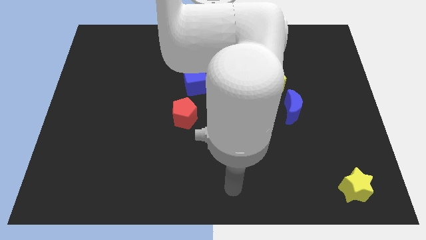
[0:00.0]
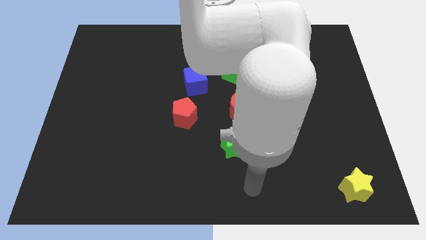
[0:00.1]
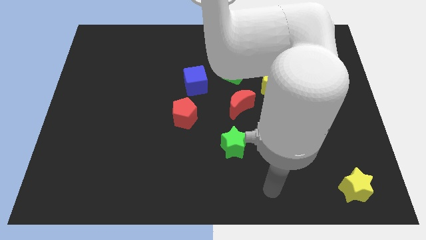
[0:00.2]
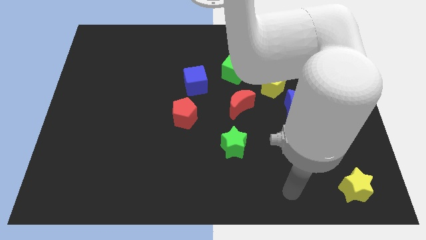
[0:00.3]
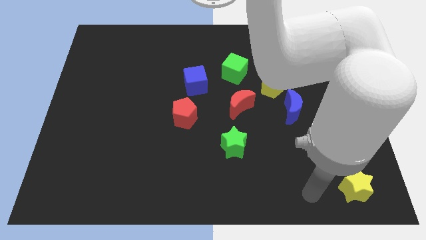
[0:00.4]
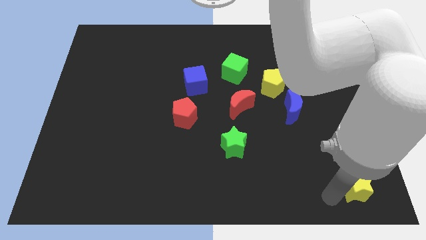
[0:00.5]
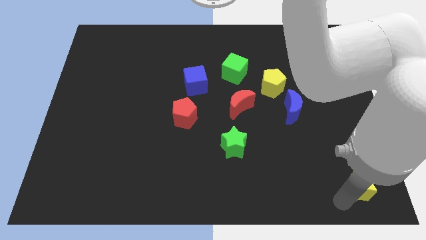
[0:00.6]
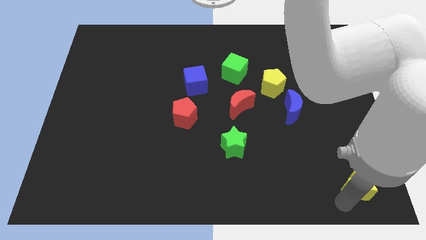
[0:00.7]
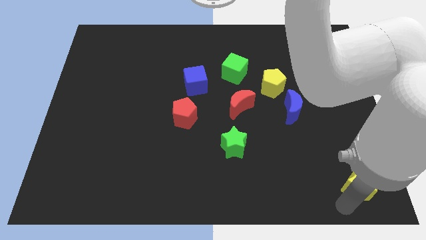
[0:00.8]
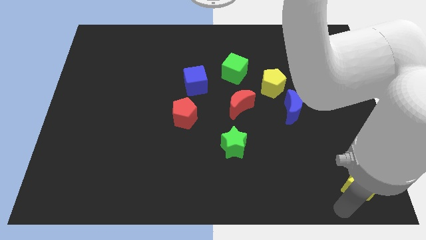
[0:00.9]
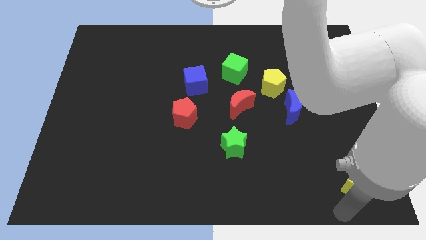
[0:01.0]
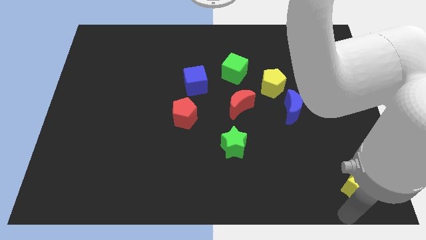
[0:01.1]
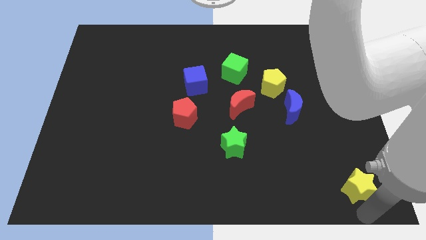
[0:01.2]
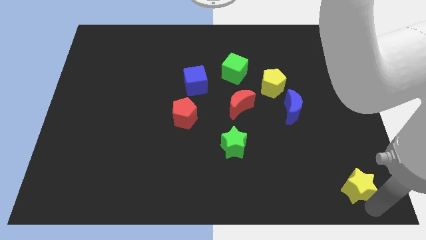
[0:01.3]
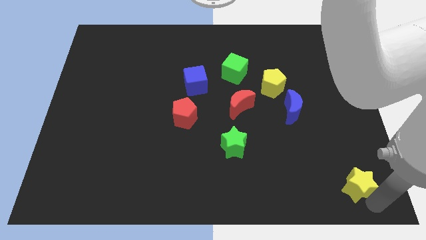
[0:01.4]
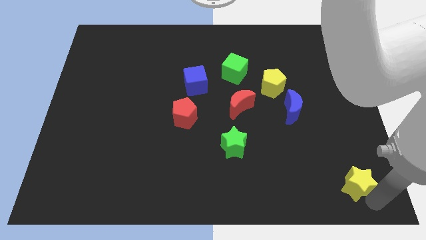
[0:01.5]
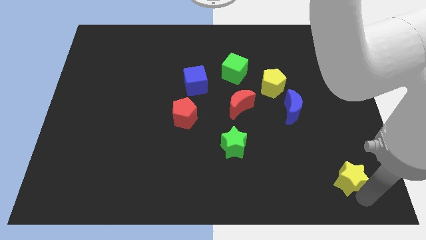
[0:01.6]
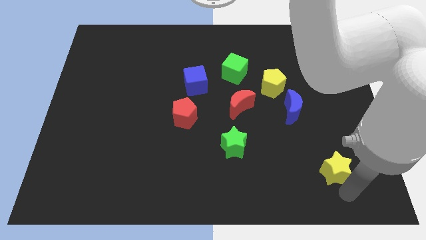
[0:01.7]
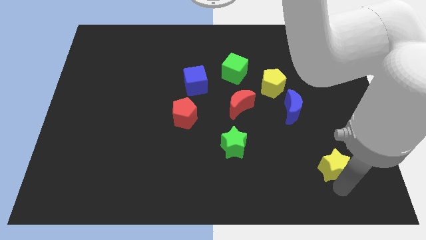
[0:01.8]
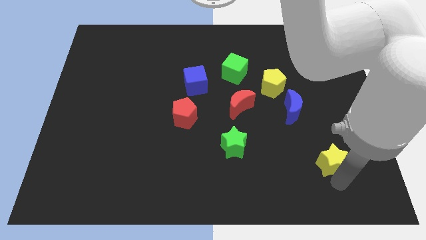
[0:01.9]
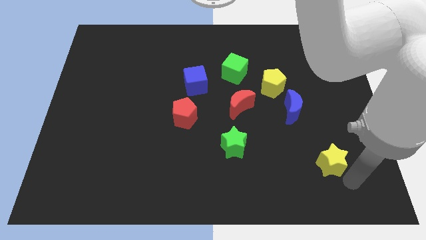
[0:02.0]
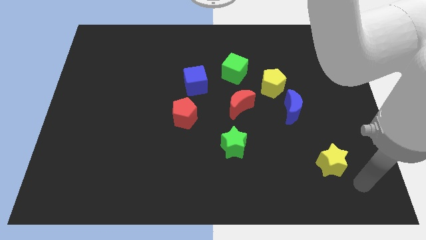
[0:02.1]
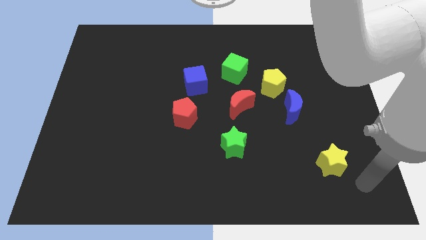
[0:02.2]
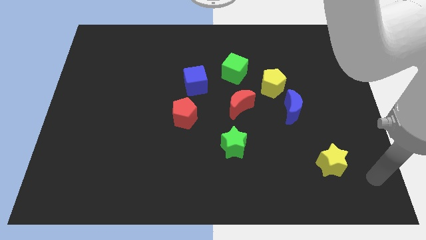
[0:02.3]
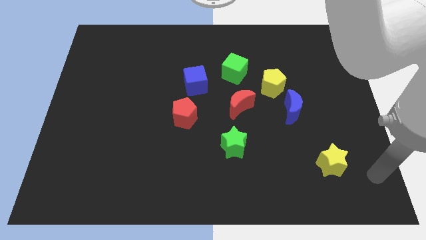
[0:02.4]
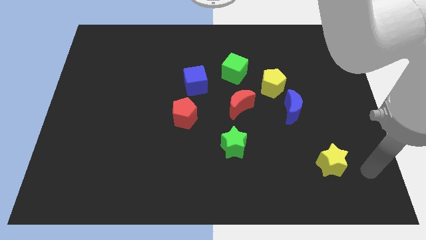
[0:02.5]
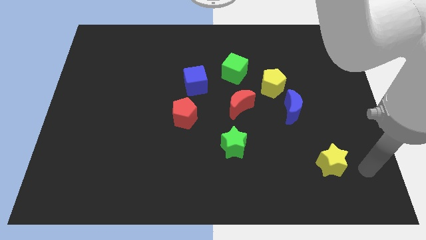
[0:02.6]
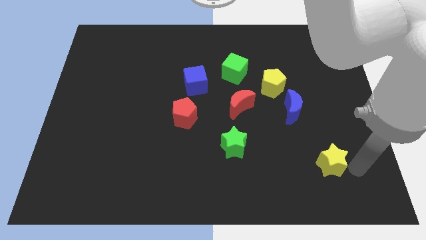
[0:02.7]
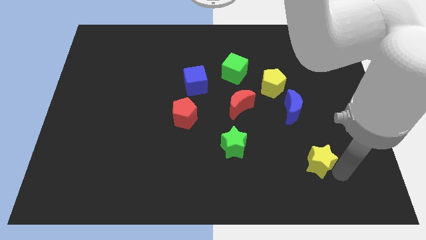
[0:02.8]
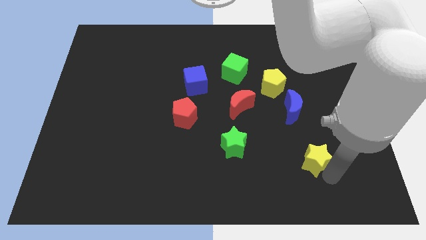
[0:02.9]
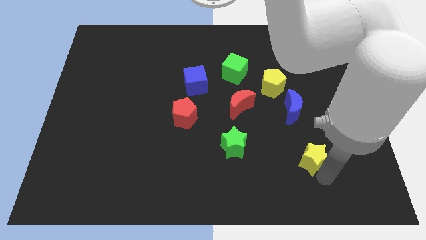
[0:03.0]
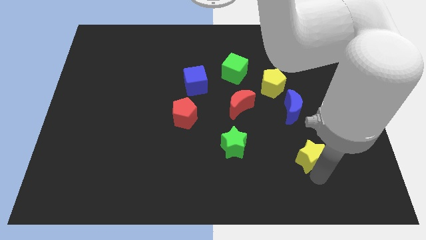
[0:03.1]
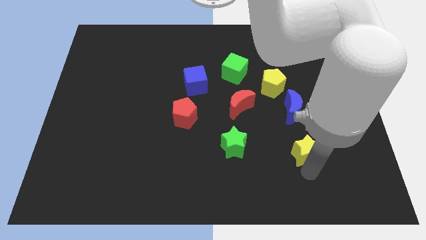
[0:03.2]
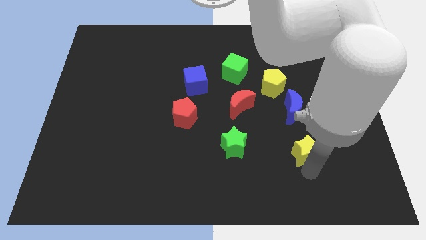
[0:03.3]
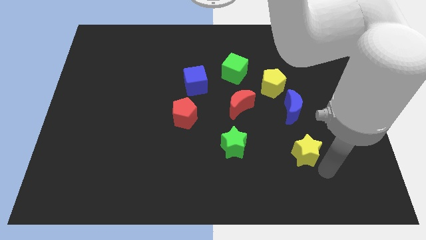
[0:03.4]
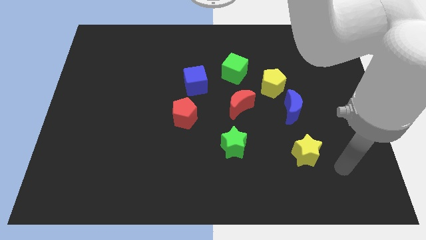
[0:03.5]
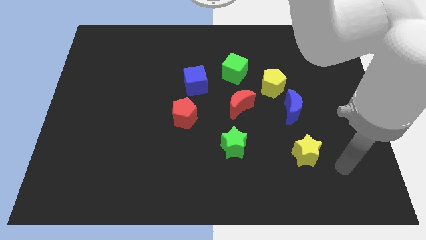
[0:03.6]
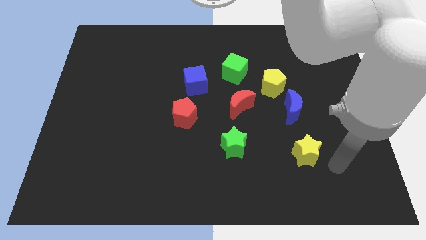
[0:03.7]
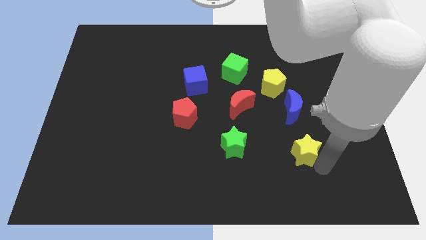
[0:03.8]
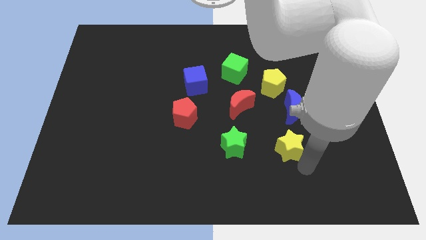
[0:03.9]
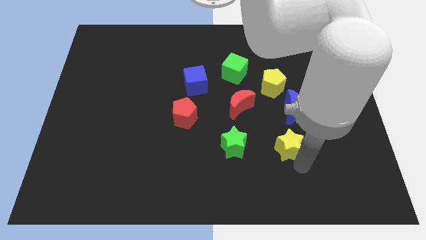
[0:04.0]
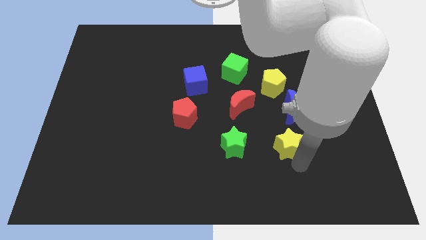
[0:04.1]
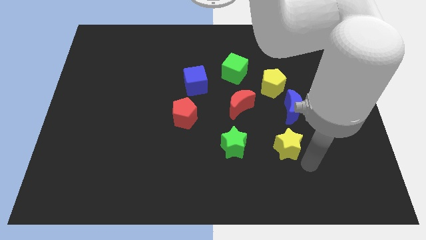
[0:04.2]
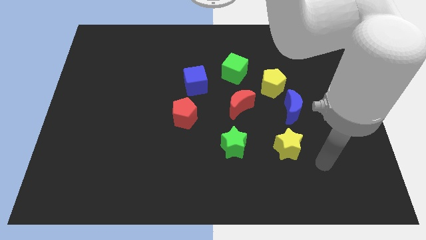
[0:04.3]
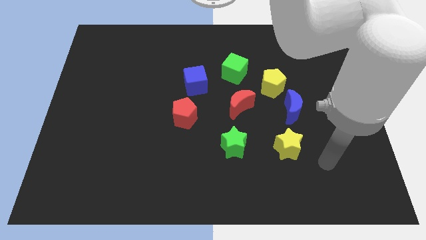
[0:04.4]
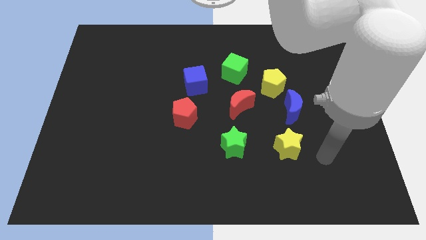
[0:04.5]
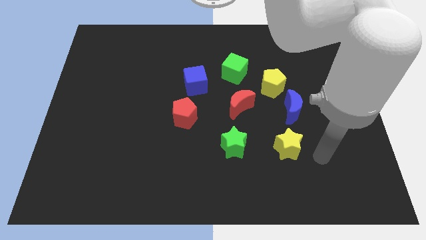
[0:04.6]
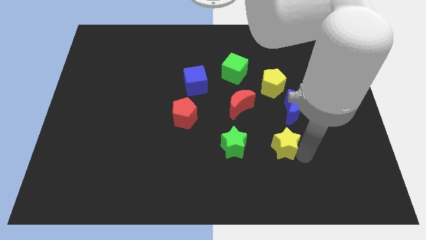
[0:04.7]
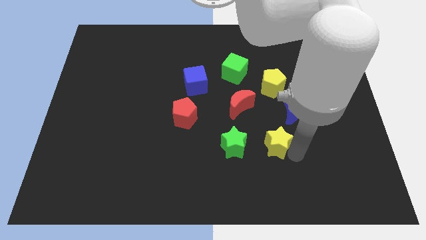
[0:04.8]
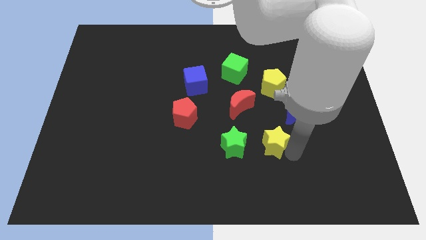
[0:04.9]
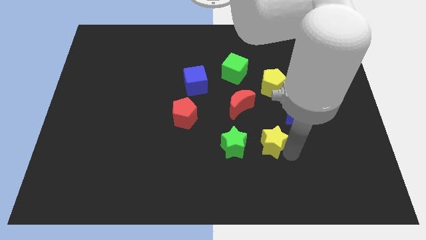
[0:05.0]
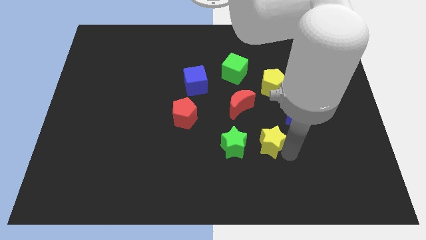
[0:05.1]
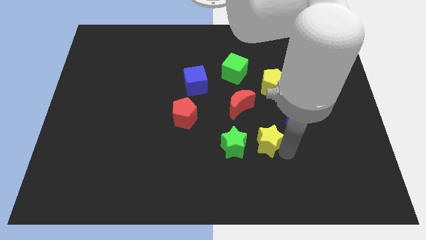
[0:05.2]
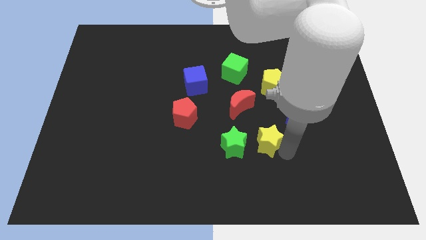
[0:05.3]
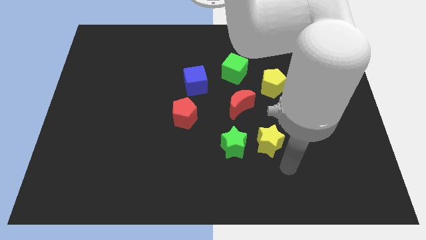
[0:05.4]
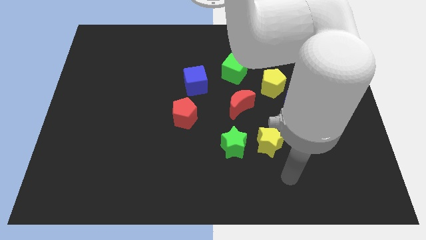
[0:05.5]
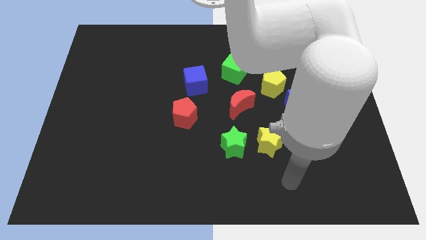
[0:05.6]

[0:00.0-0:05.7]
place the yellow star on the right side of the green star

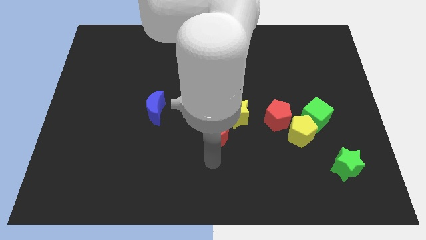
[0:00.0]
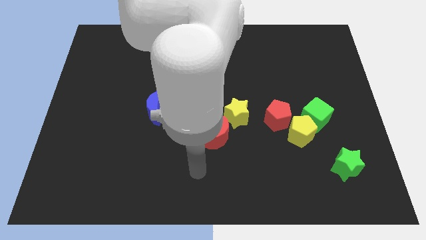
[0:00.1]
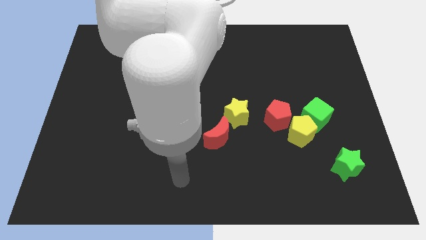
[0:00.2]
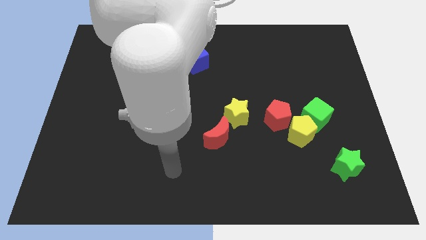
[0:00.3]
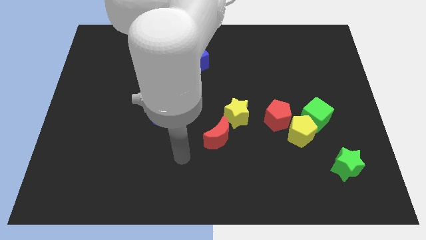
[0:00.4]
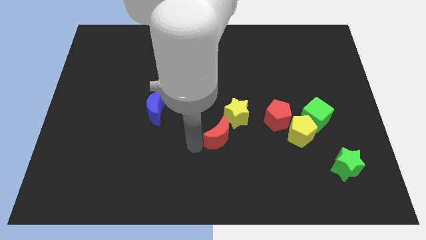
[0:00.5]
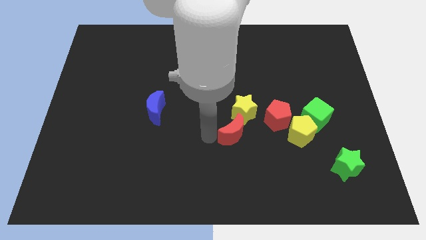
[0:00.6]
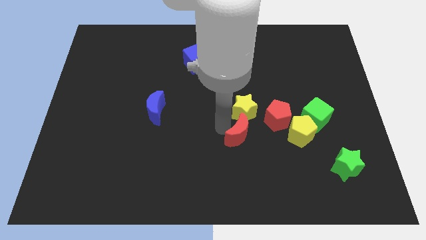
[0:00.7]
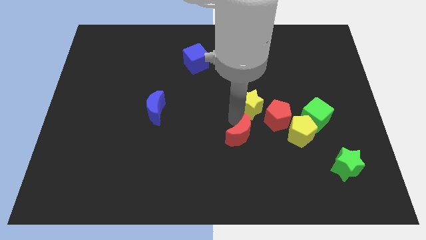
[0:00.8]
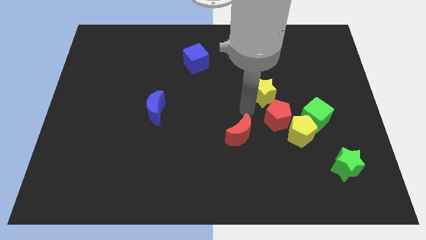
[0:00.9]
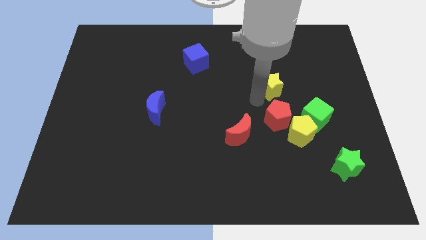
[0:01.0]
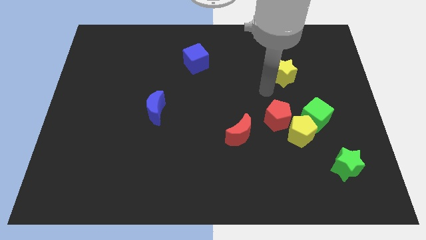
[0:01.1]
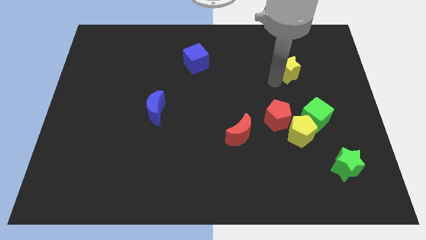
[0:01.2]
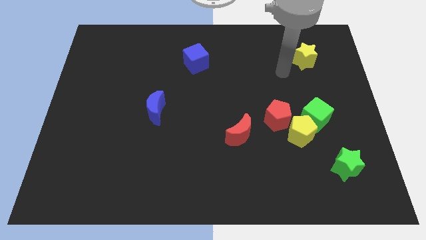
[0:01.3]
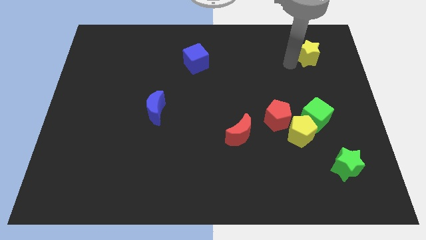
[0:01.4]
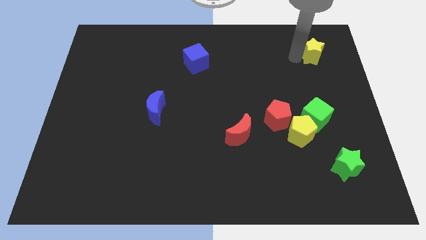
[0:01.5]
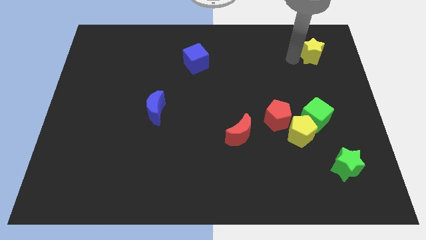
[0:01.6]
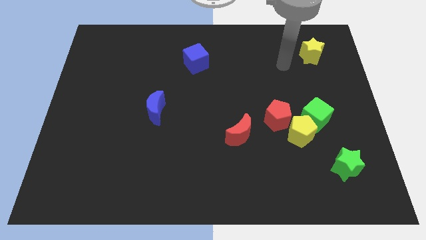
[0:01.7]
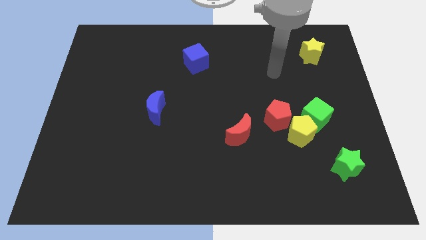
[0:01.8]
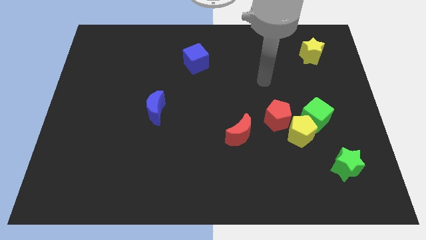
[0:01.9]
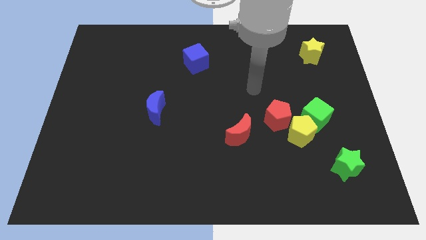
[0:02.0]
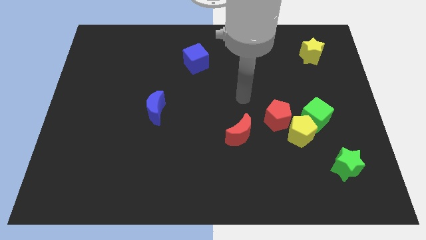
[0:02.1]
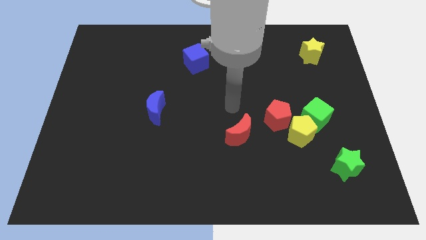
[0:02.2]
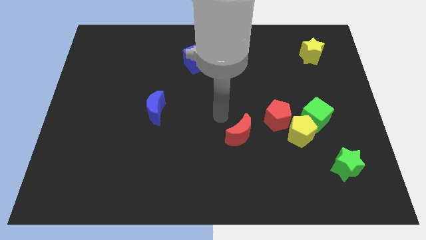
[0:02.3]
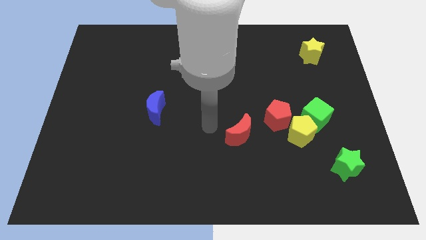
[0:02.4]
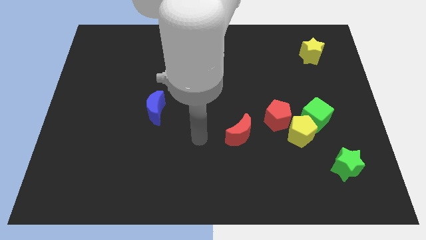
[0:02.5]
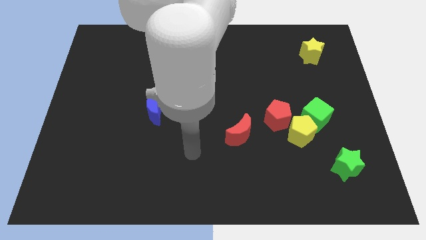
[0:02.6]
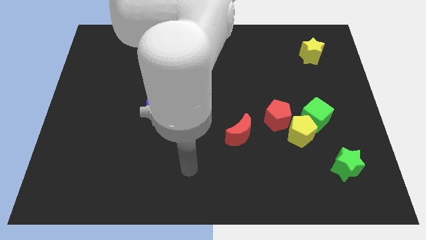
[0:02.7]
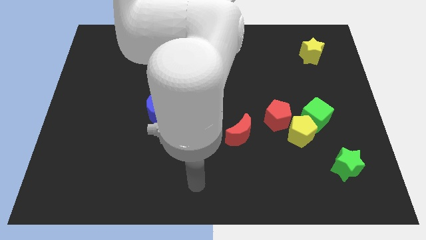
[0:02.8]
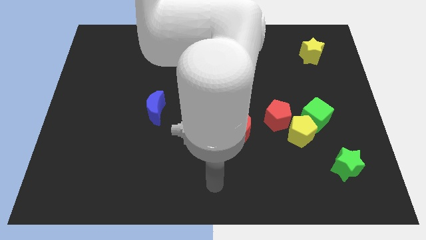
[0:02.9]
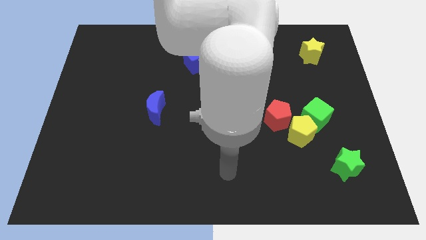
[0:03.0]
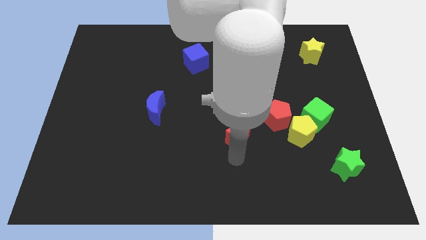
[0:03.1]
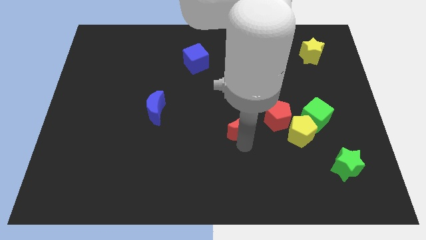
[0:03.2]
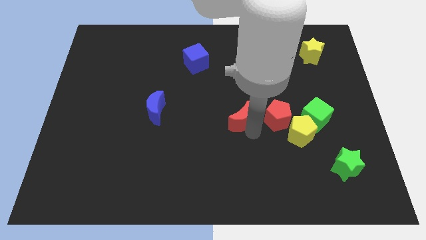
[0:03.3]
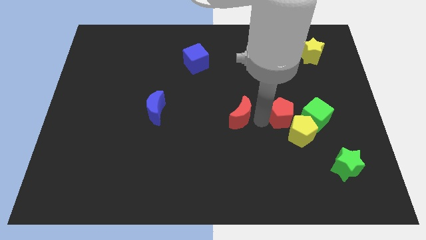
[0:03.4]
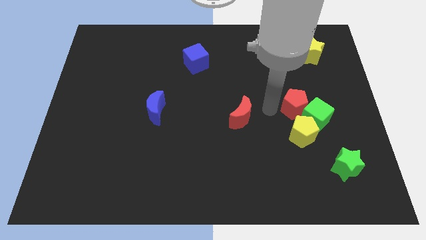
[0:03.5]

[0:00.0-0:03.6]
push the yellow star to the top right of the board
